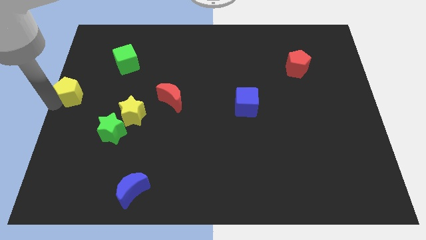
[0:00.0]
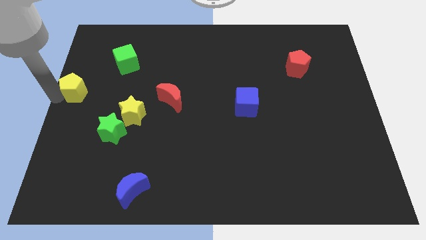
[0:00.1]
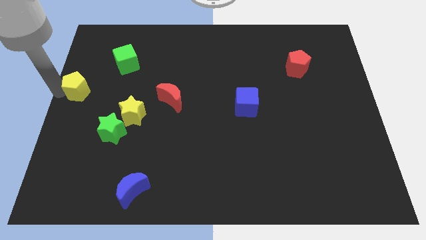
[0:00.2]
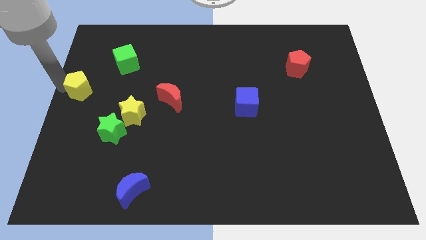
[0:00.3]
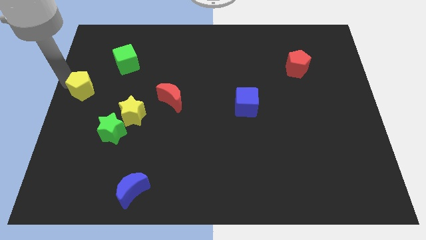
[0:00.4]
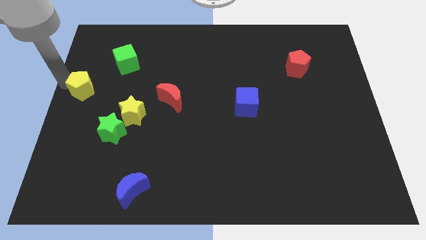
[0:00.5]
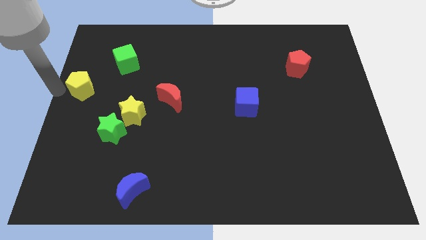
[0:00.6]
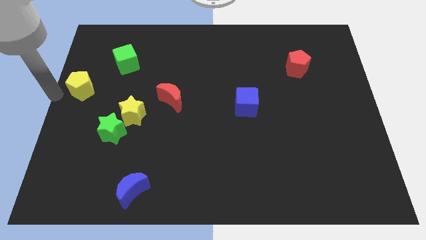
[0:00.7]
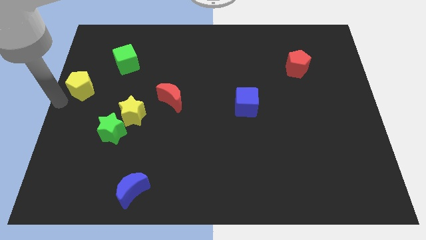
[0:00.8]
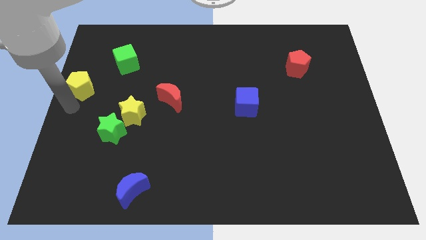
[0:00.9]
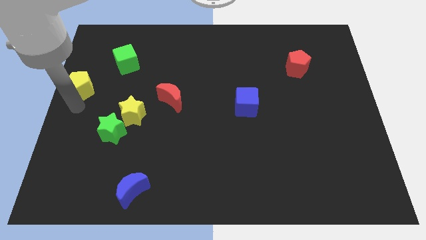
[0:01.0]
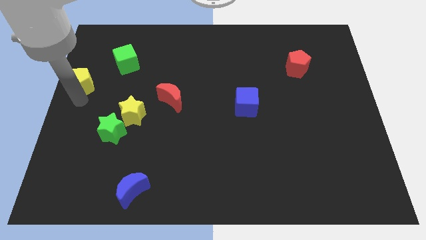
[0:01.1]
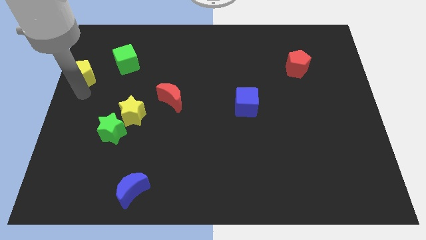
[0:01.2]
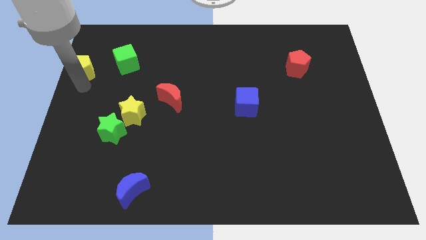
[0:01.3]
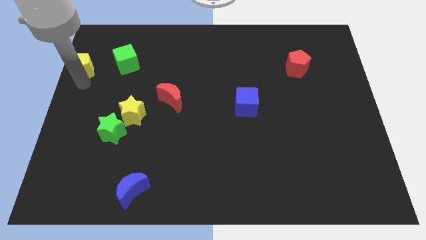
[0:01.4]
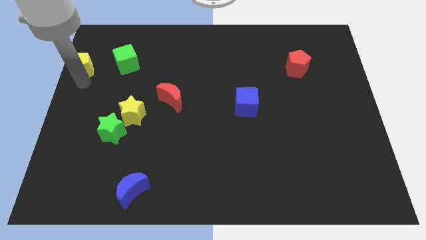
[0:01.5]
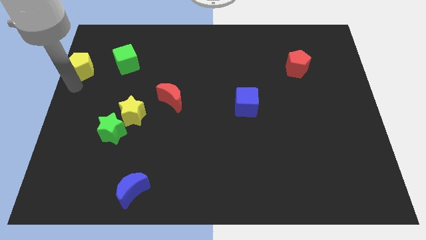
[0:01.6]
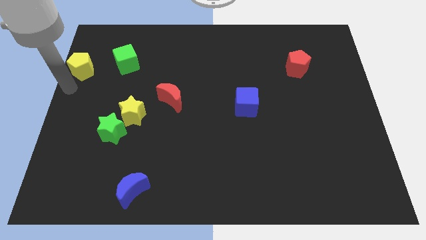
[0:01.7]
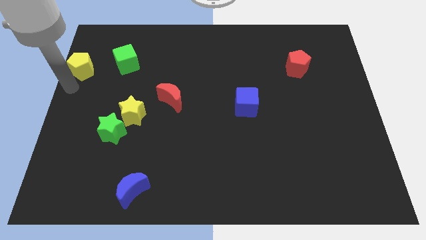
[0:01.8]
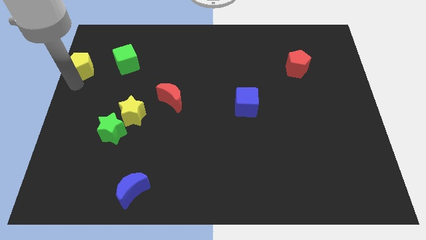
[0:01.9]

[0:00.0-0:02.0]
place the yellow pentagon horizontally left to the green cube

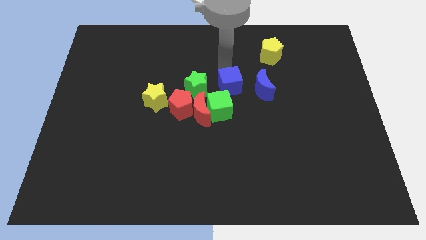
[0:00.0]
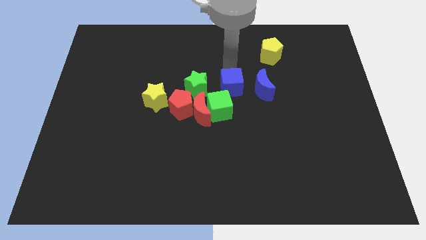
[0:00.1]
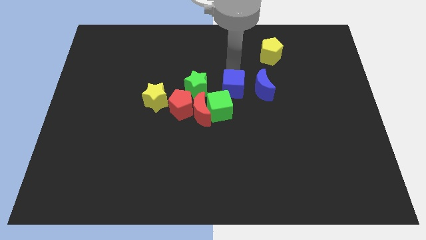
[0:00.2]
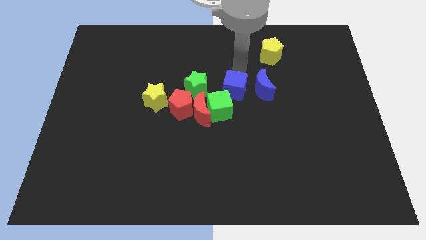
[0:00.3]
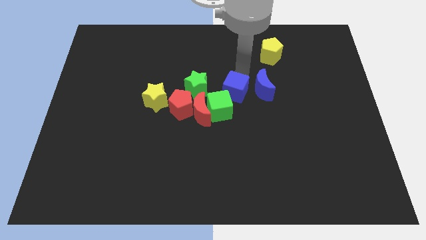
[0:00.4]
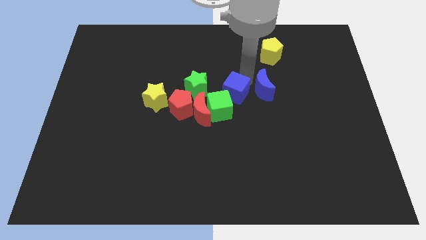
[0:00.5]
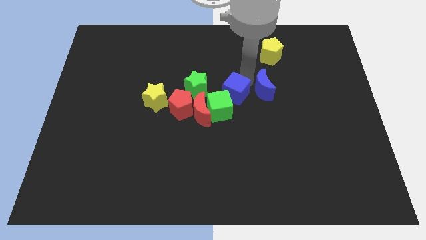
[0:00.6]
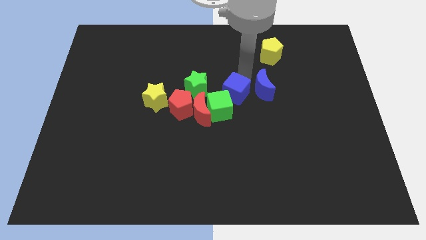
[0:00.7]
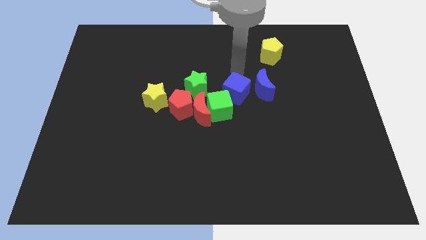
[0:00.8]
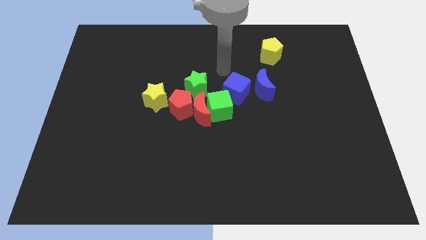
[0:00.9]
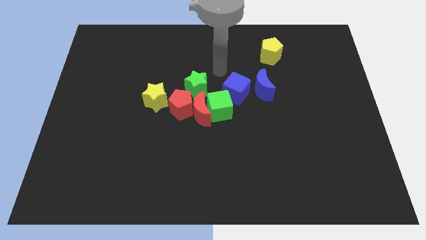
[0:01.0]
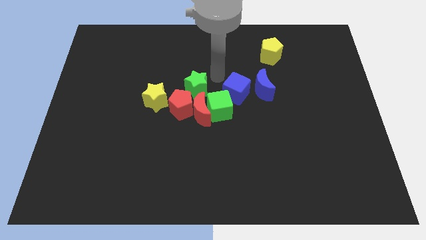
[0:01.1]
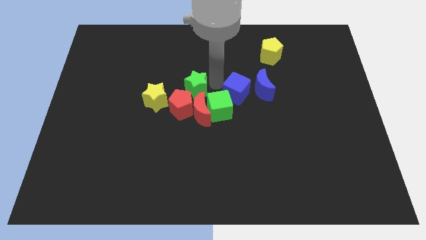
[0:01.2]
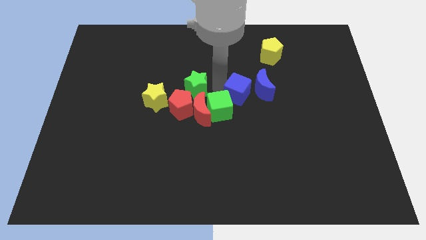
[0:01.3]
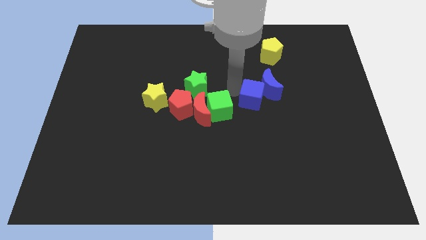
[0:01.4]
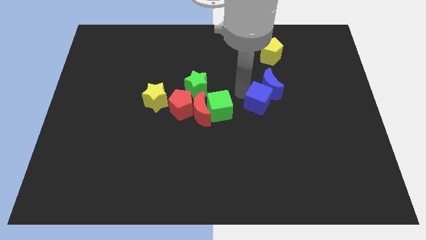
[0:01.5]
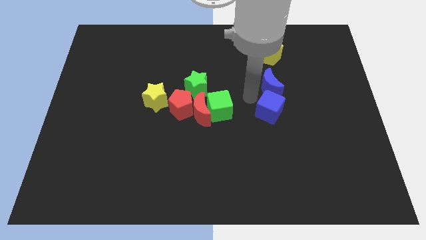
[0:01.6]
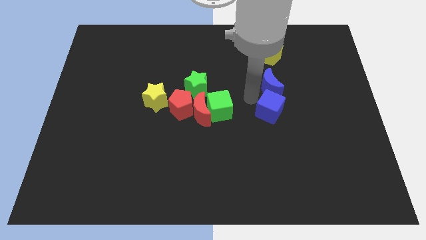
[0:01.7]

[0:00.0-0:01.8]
place the blue cube below blue moon

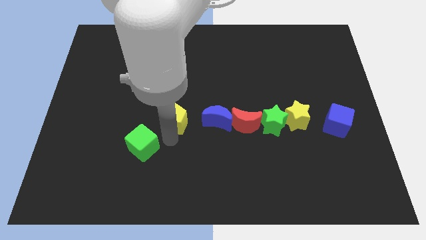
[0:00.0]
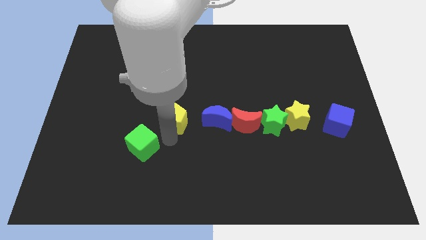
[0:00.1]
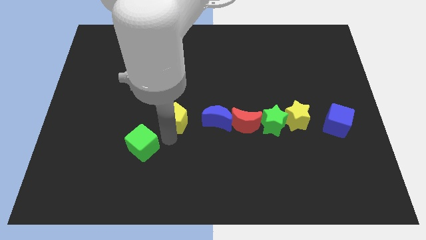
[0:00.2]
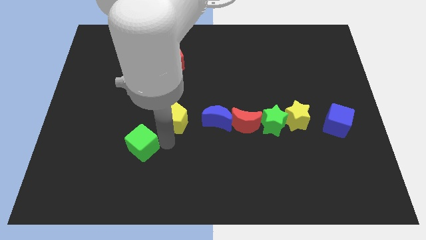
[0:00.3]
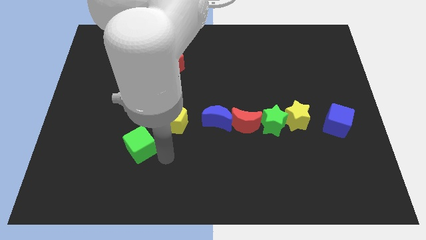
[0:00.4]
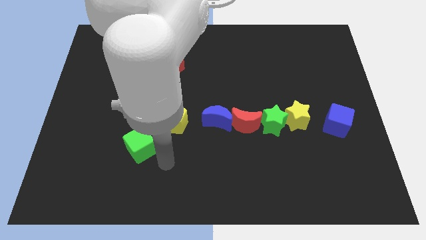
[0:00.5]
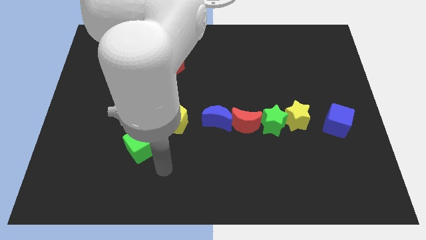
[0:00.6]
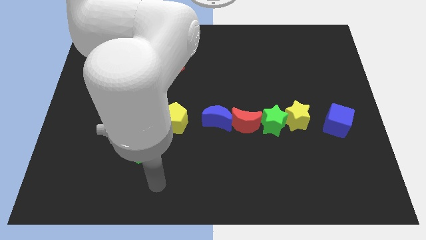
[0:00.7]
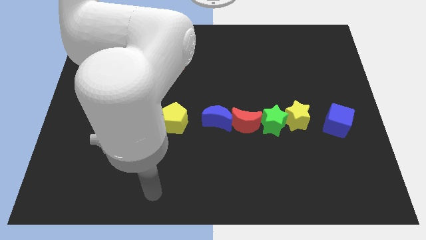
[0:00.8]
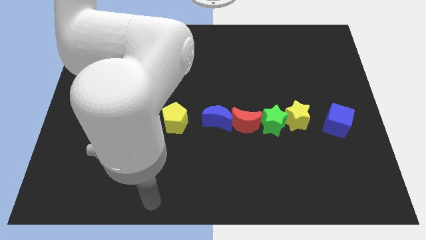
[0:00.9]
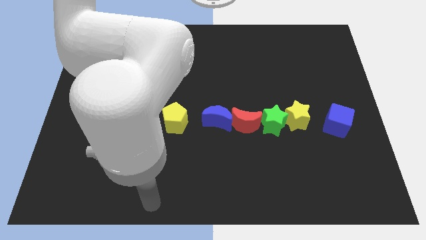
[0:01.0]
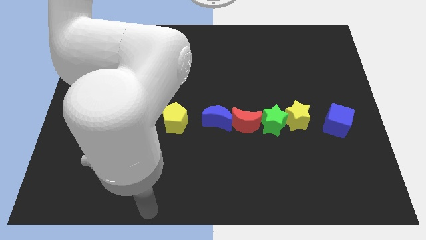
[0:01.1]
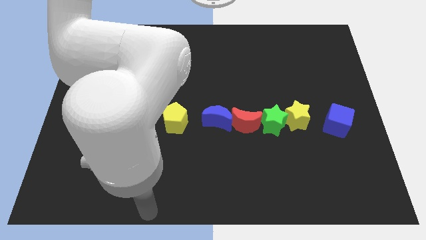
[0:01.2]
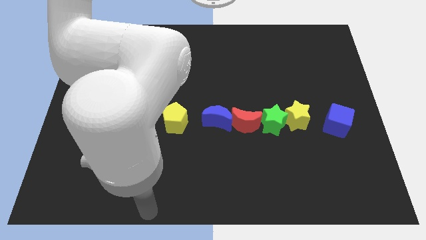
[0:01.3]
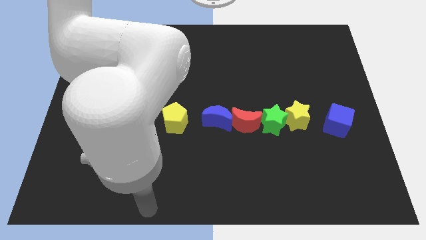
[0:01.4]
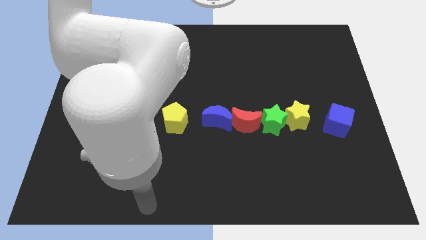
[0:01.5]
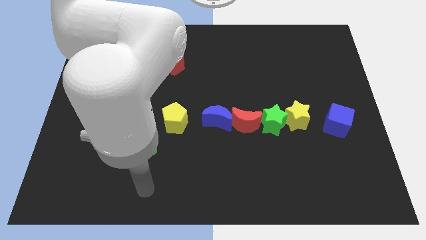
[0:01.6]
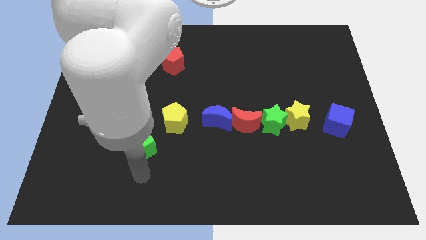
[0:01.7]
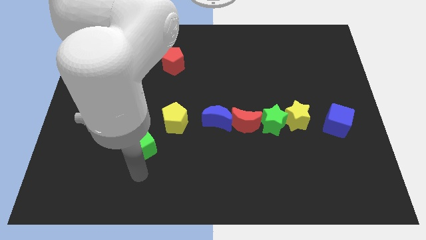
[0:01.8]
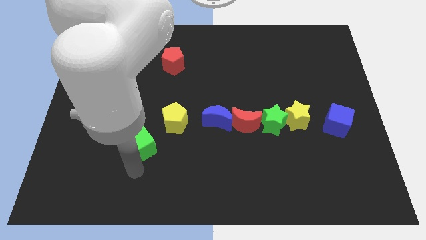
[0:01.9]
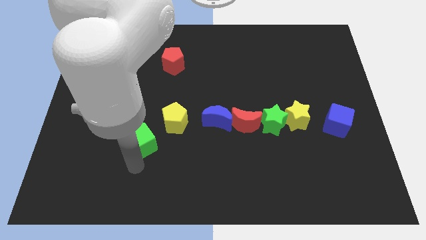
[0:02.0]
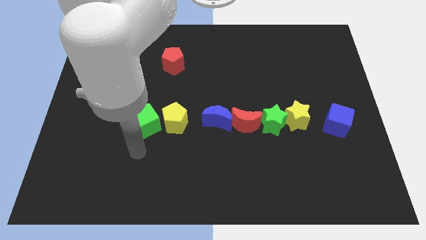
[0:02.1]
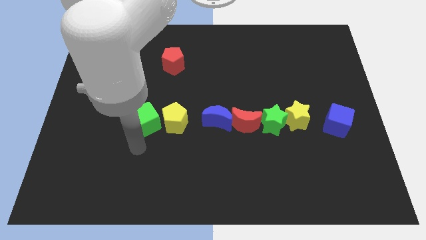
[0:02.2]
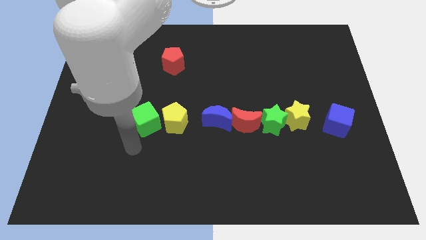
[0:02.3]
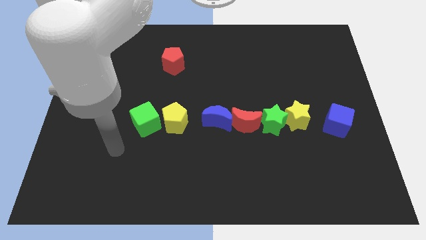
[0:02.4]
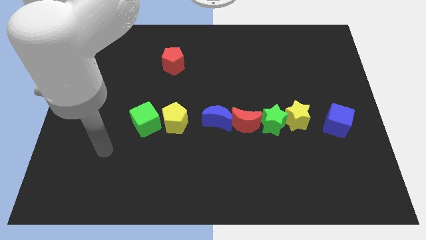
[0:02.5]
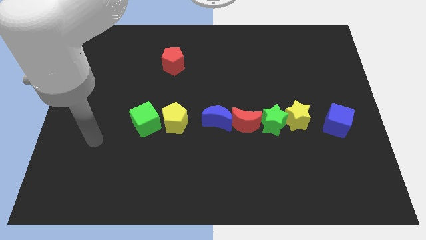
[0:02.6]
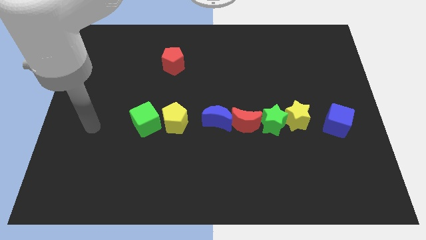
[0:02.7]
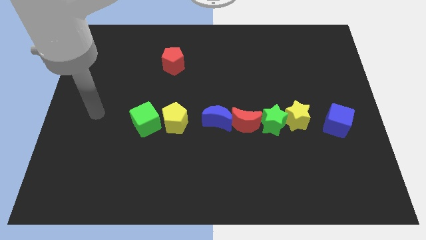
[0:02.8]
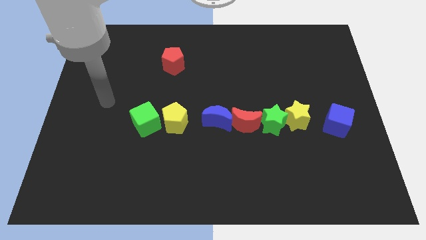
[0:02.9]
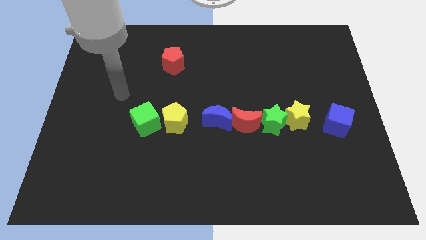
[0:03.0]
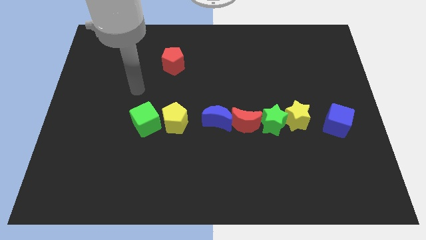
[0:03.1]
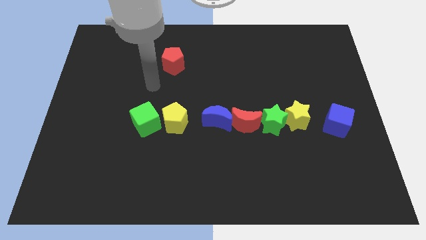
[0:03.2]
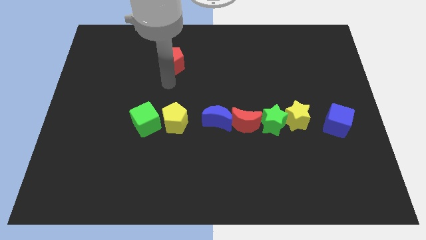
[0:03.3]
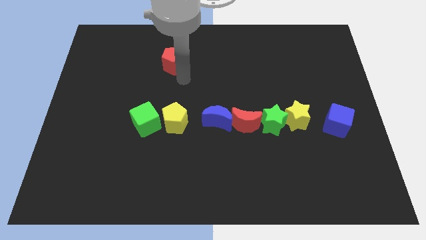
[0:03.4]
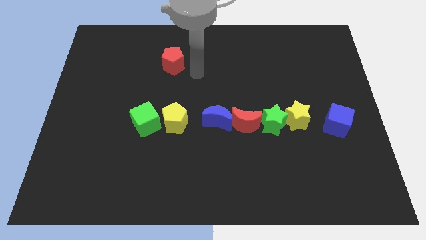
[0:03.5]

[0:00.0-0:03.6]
place the green cube left to the yellow pentagon

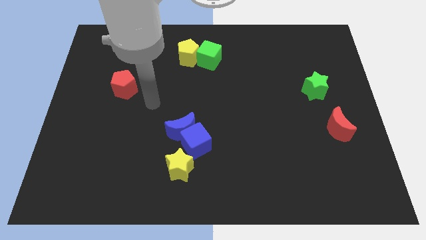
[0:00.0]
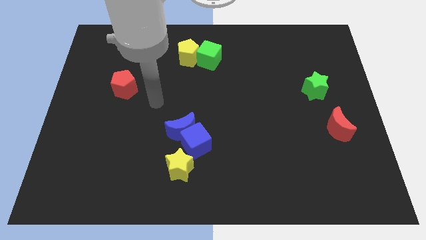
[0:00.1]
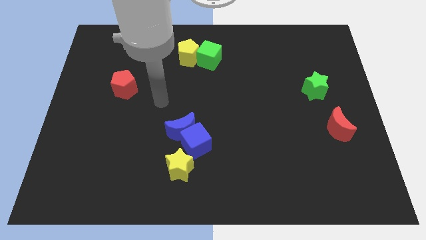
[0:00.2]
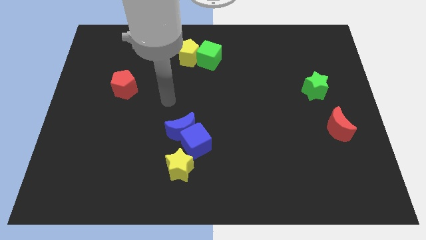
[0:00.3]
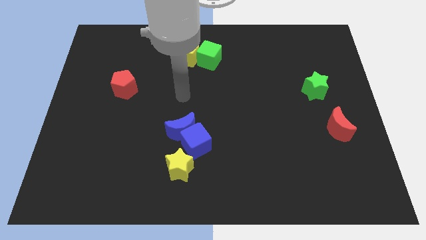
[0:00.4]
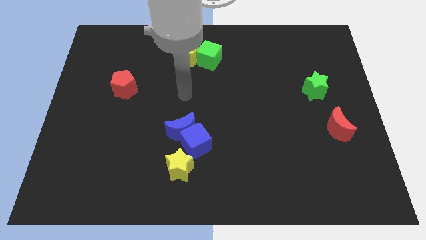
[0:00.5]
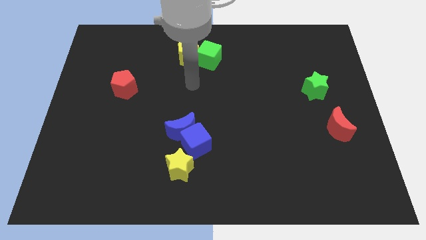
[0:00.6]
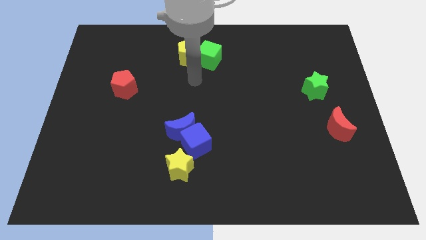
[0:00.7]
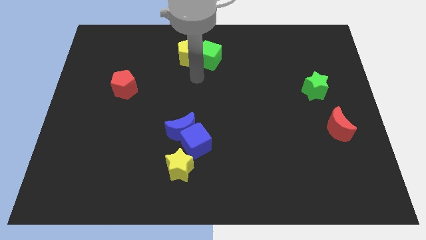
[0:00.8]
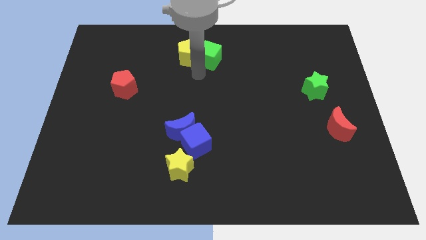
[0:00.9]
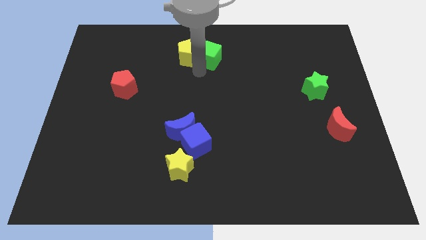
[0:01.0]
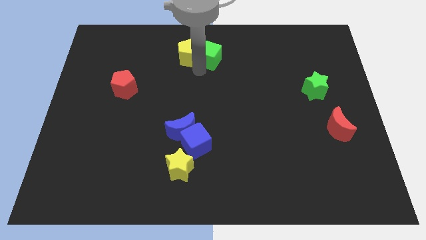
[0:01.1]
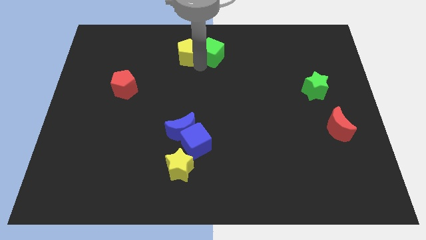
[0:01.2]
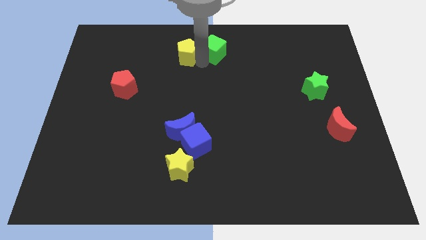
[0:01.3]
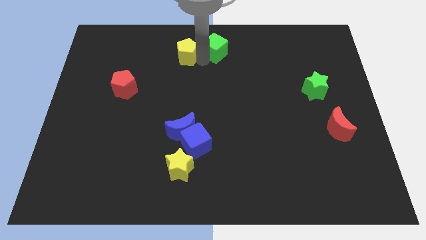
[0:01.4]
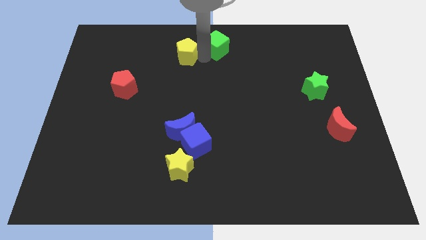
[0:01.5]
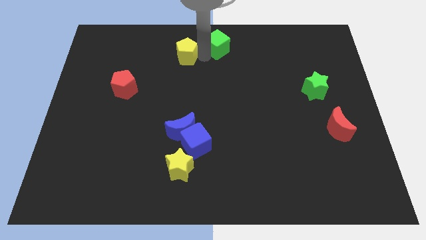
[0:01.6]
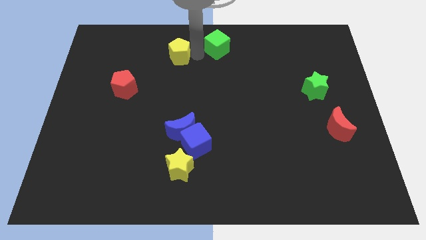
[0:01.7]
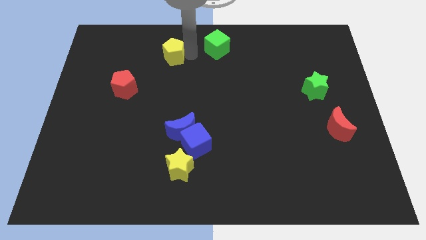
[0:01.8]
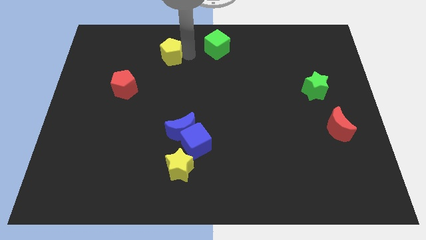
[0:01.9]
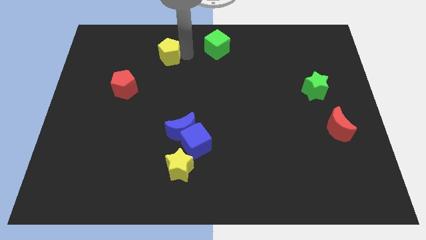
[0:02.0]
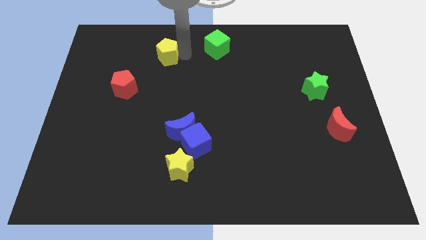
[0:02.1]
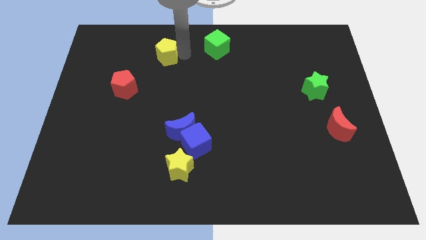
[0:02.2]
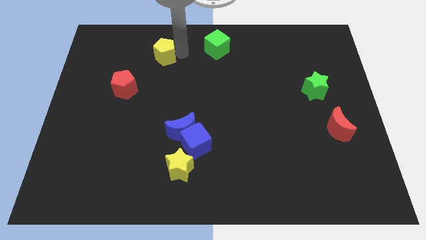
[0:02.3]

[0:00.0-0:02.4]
separate the green cube from the yellow pentagon
